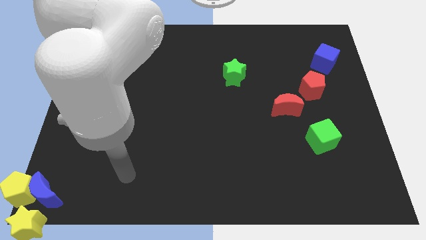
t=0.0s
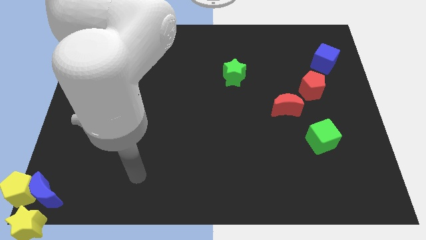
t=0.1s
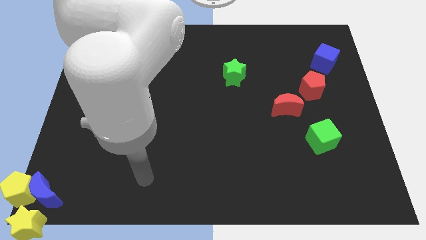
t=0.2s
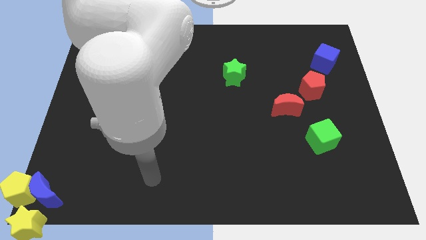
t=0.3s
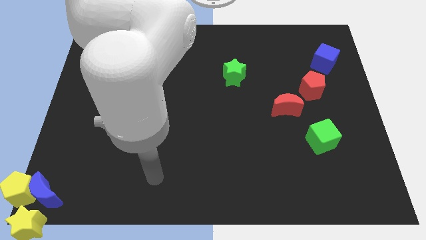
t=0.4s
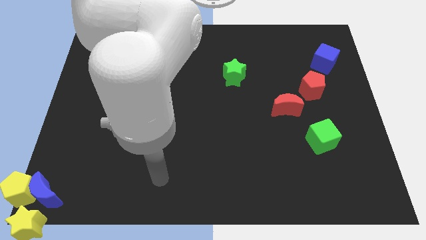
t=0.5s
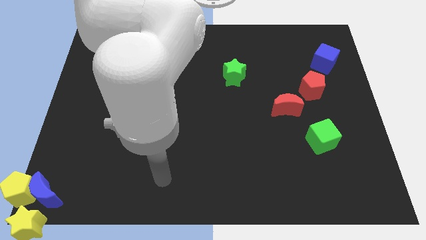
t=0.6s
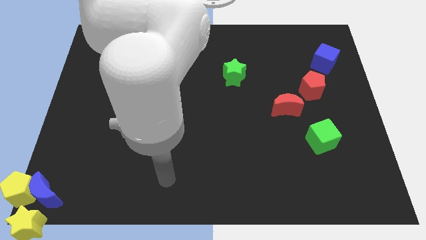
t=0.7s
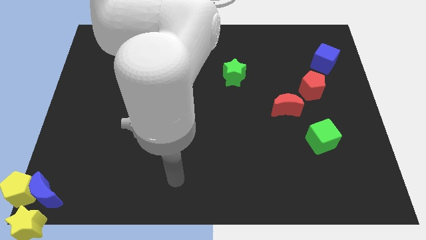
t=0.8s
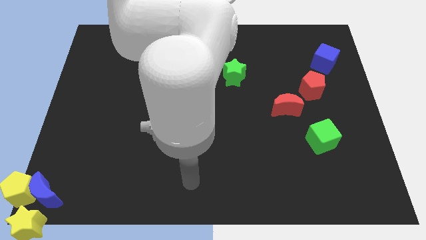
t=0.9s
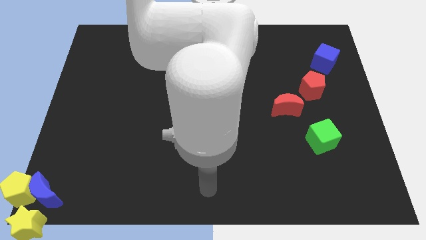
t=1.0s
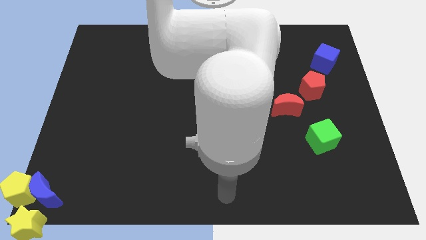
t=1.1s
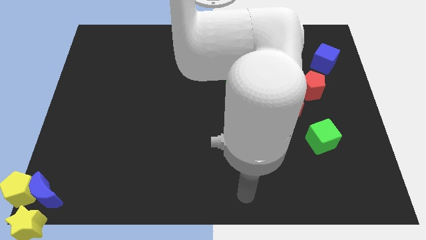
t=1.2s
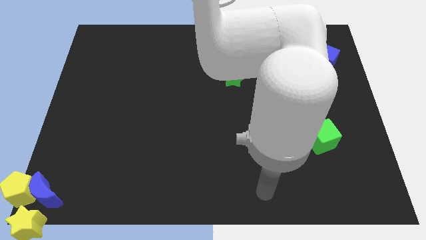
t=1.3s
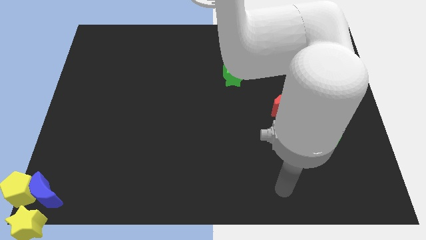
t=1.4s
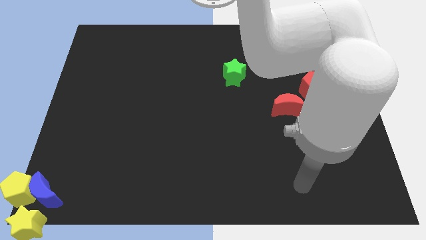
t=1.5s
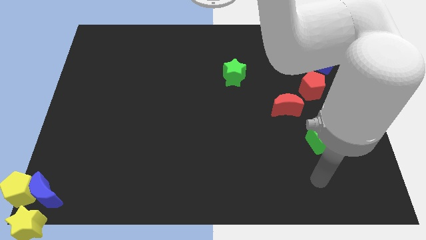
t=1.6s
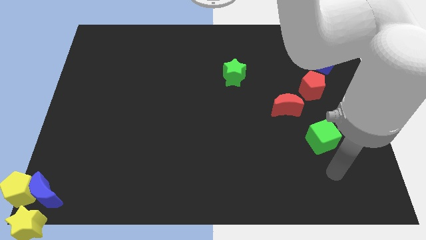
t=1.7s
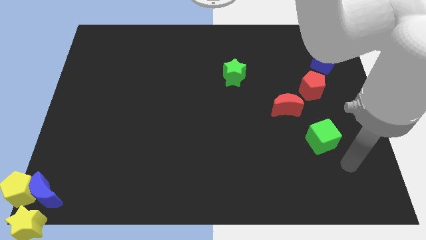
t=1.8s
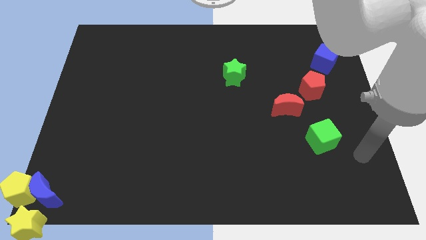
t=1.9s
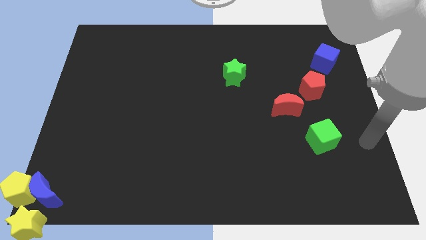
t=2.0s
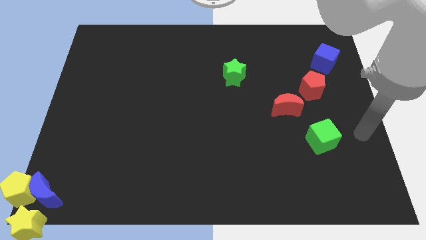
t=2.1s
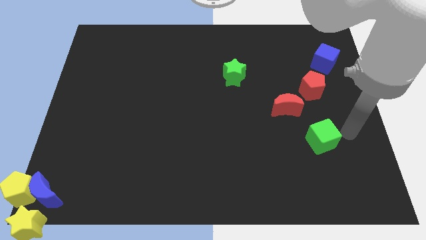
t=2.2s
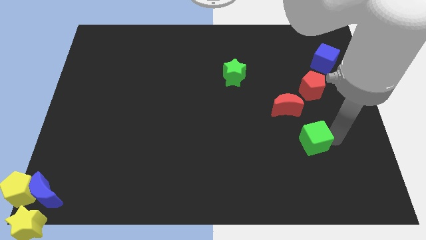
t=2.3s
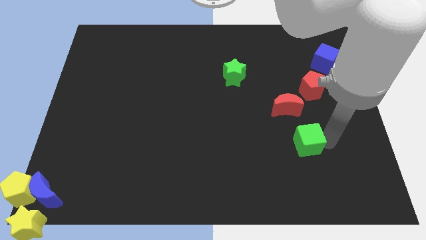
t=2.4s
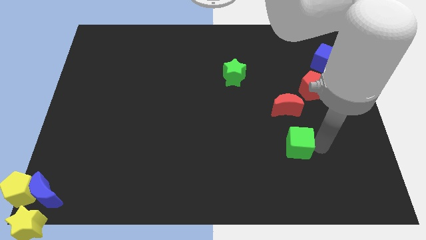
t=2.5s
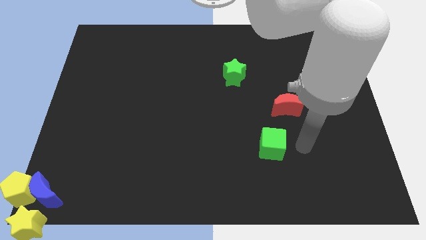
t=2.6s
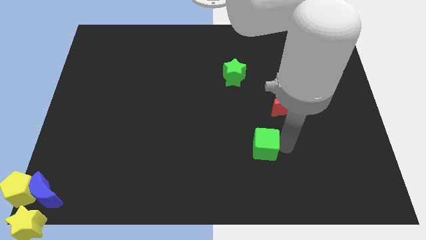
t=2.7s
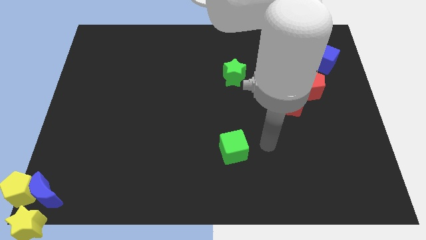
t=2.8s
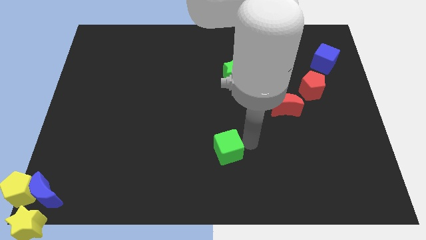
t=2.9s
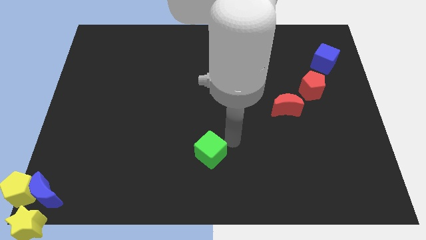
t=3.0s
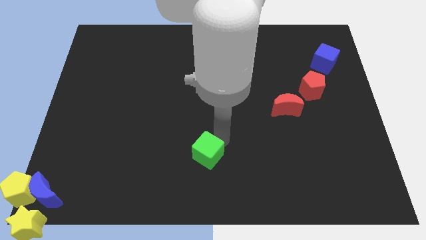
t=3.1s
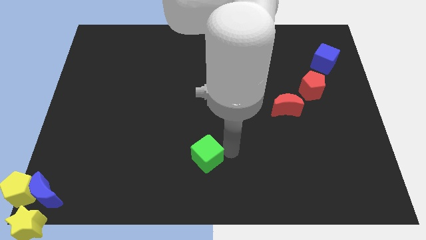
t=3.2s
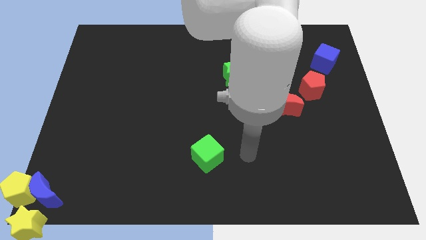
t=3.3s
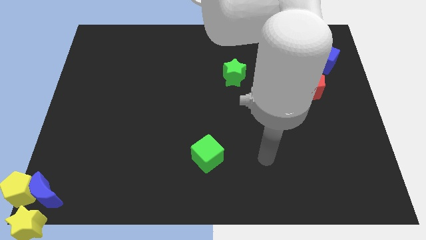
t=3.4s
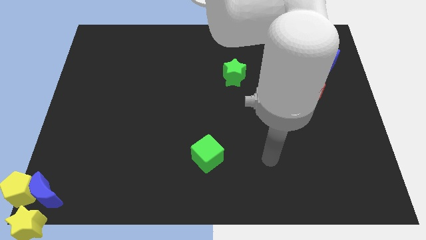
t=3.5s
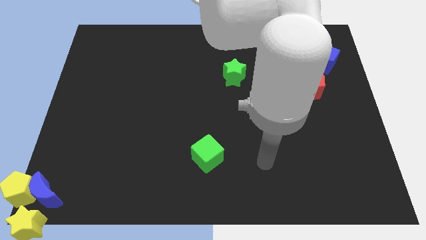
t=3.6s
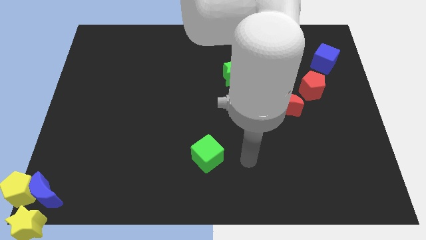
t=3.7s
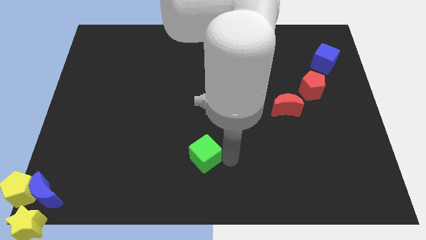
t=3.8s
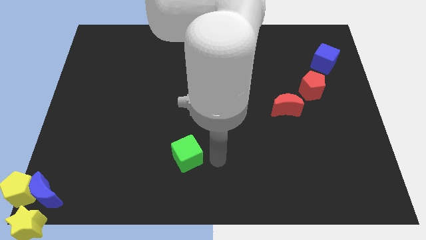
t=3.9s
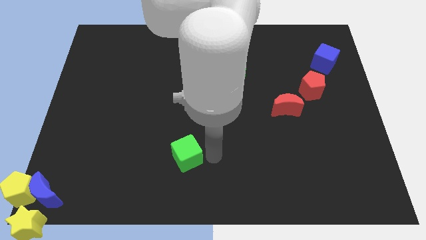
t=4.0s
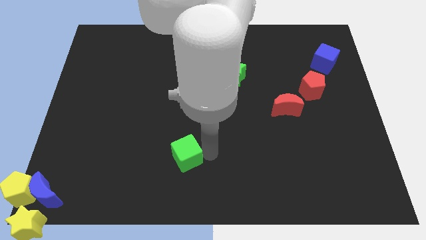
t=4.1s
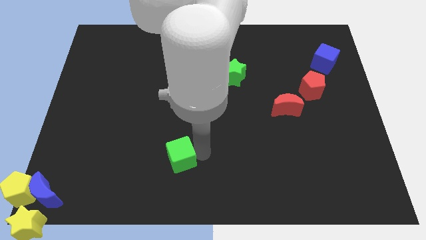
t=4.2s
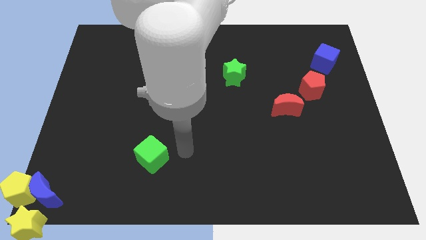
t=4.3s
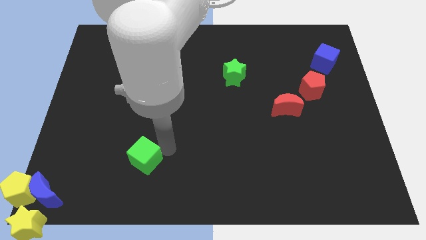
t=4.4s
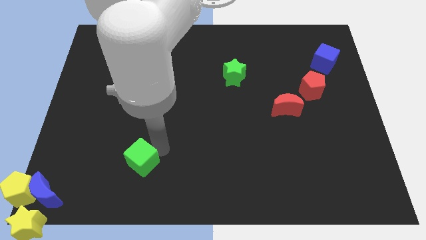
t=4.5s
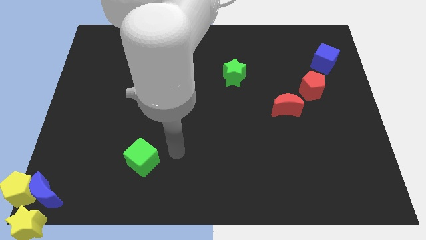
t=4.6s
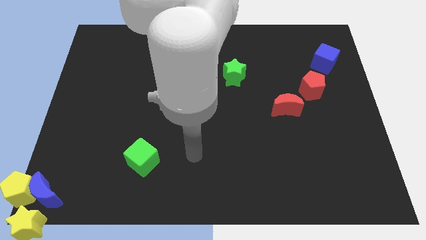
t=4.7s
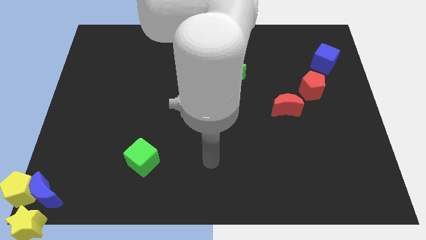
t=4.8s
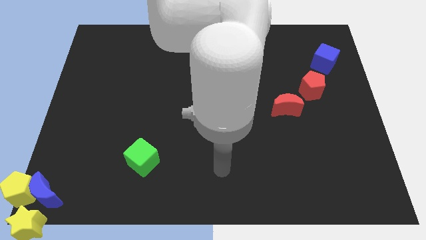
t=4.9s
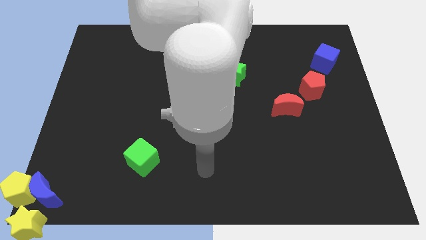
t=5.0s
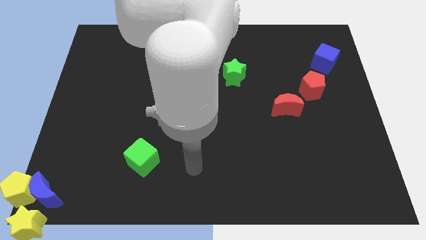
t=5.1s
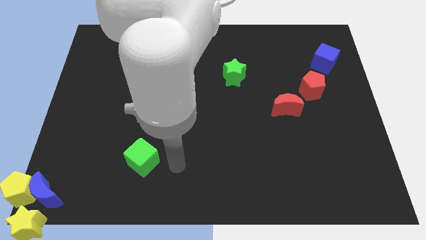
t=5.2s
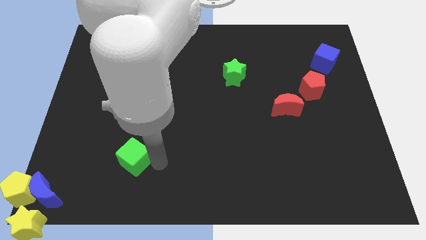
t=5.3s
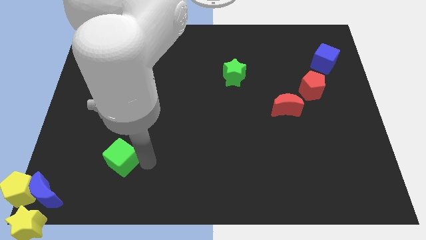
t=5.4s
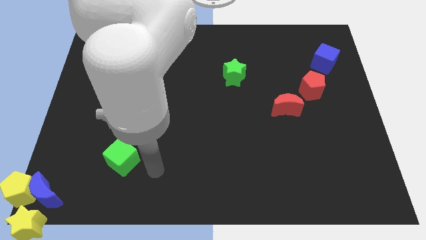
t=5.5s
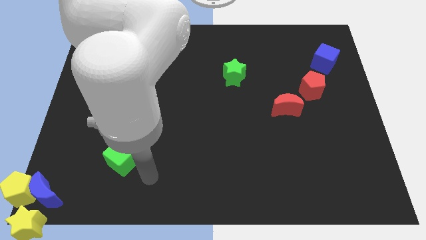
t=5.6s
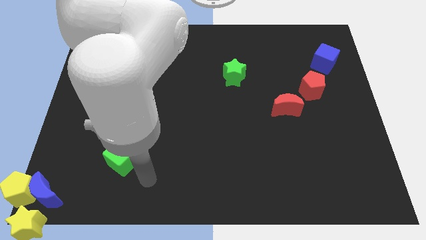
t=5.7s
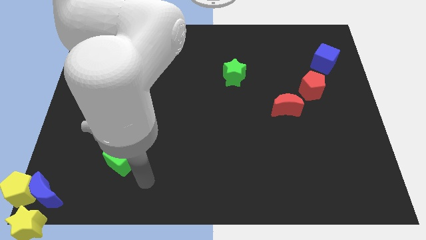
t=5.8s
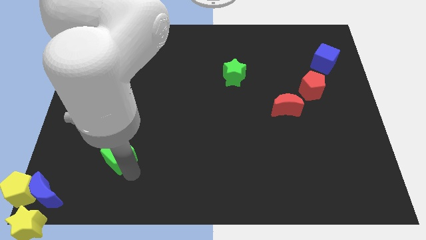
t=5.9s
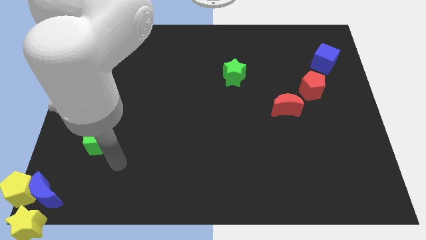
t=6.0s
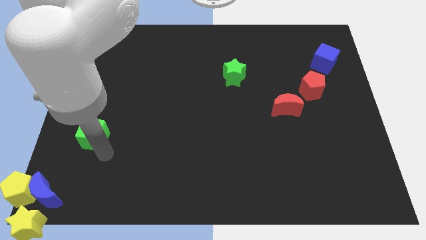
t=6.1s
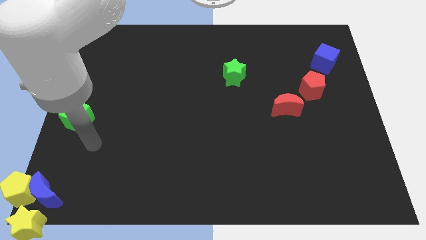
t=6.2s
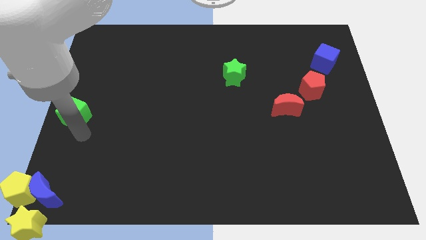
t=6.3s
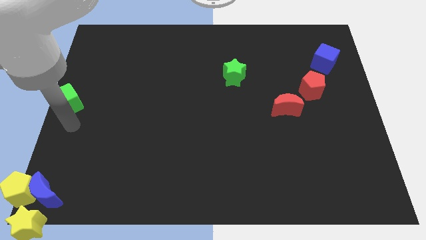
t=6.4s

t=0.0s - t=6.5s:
drag green cube towards the center left side of the board

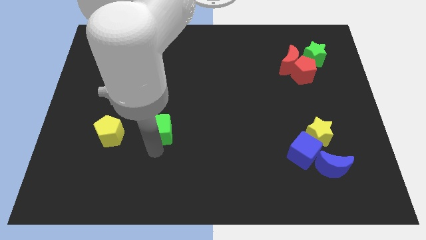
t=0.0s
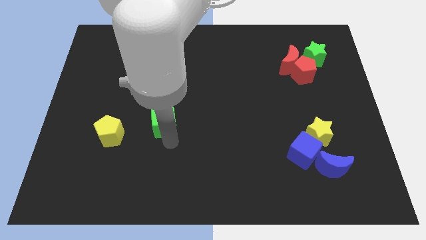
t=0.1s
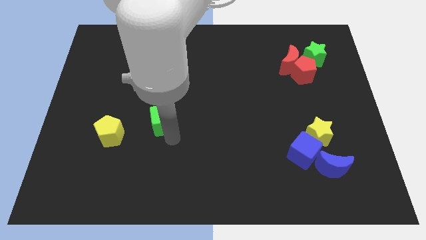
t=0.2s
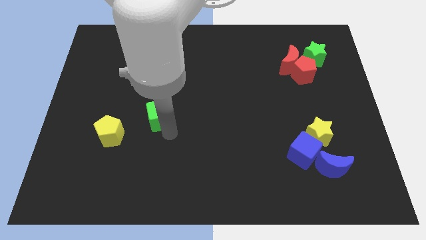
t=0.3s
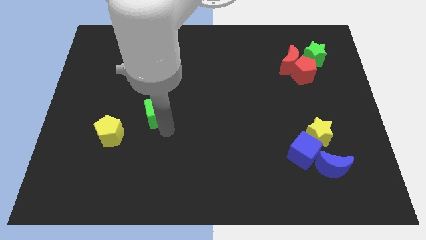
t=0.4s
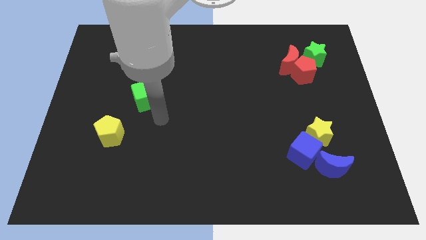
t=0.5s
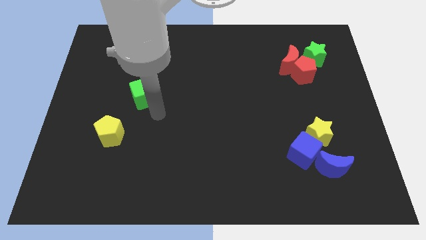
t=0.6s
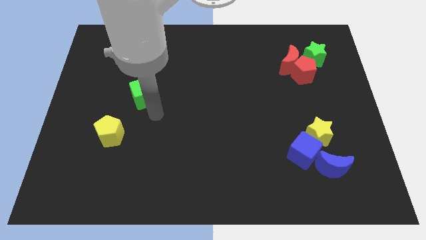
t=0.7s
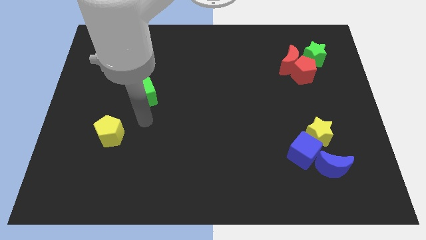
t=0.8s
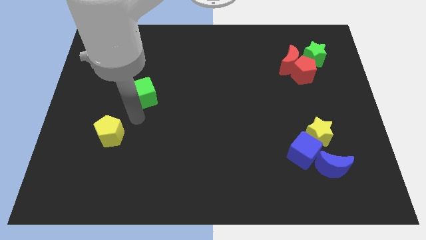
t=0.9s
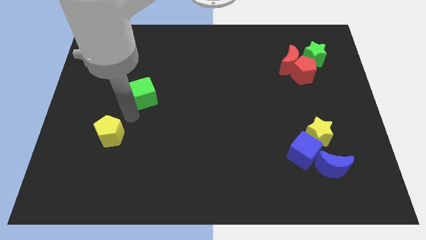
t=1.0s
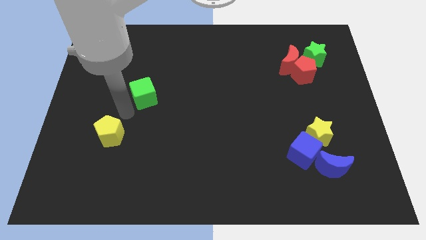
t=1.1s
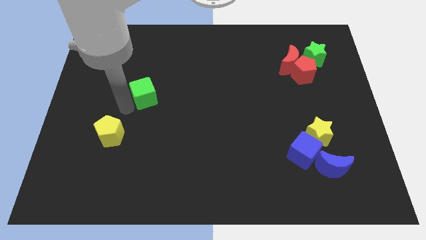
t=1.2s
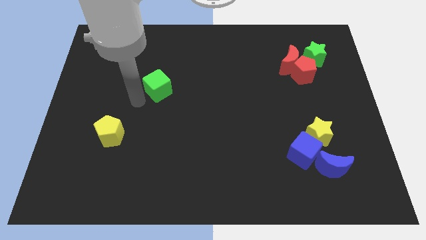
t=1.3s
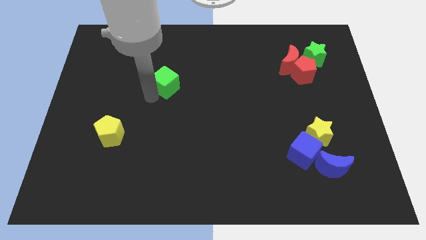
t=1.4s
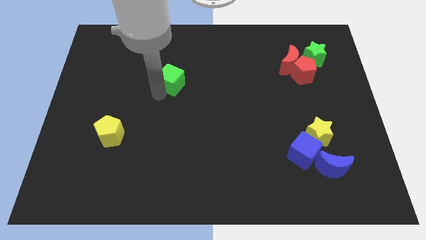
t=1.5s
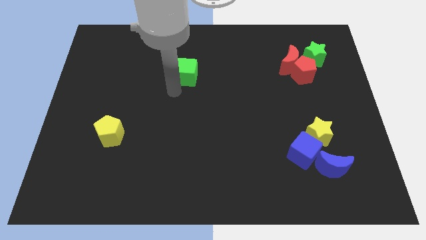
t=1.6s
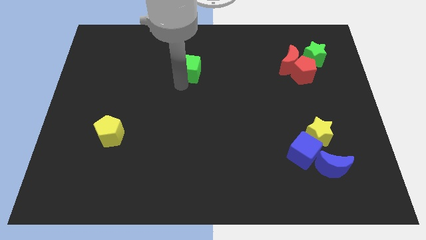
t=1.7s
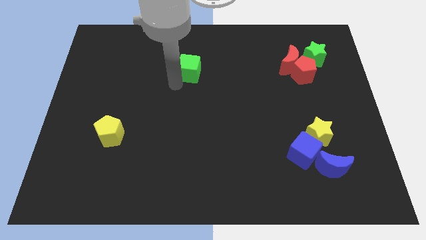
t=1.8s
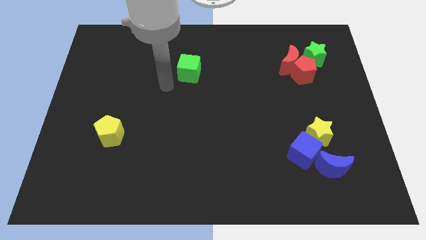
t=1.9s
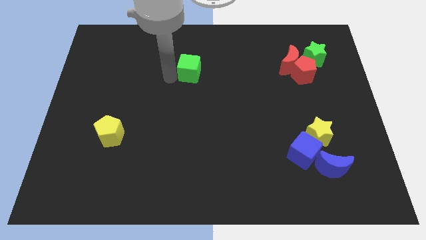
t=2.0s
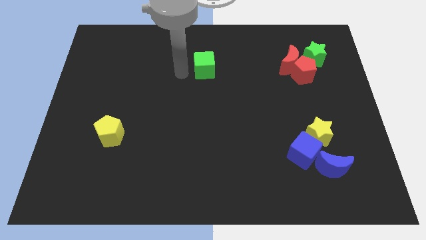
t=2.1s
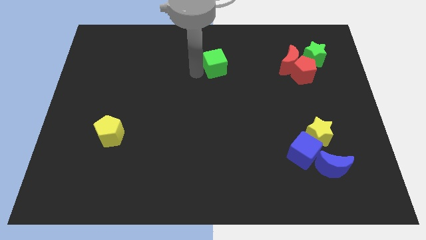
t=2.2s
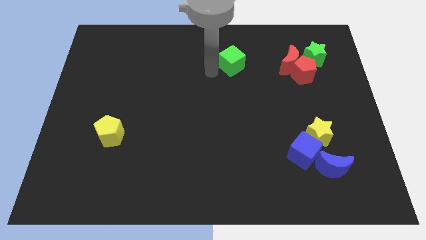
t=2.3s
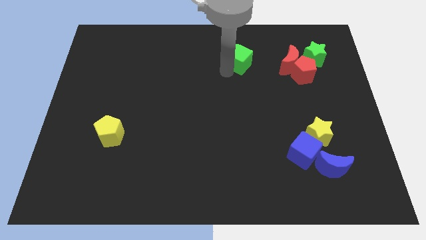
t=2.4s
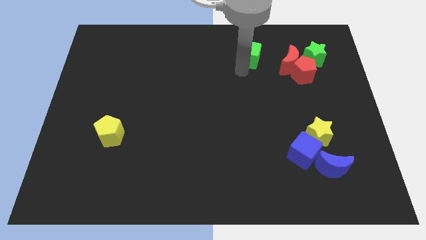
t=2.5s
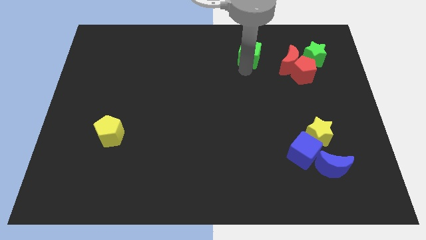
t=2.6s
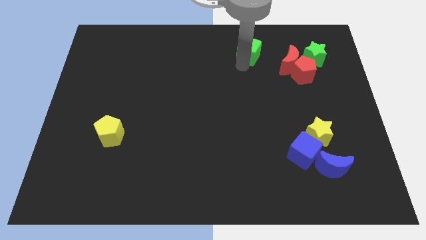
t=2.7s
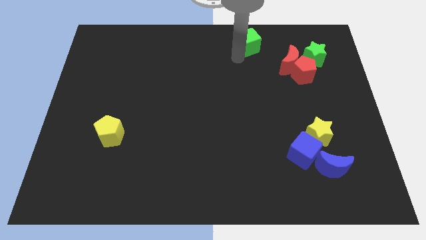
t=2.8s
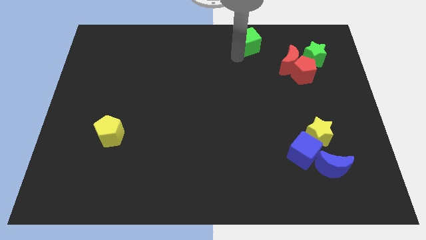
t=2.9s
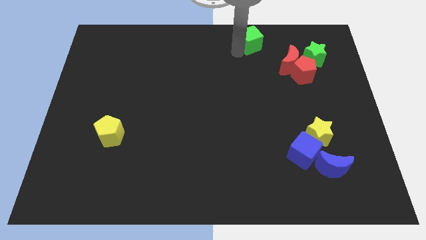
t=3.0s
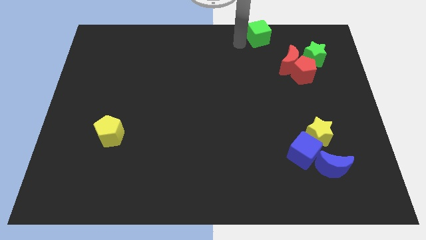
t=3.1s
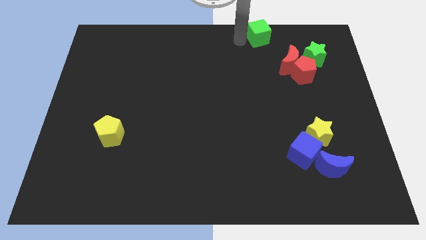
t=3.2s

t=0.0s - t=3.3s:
push the green cube diagonally to the top left of the red crescent
